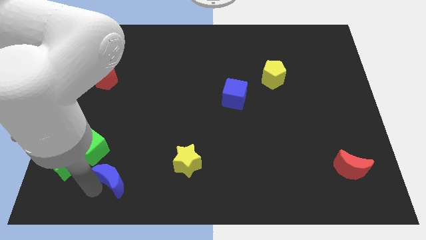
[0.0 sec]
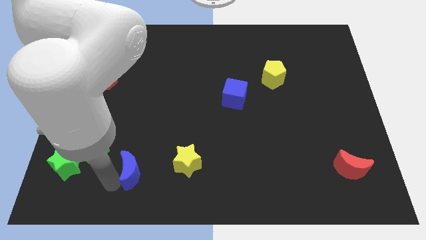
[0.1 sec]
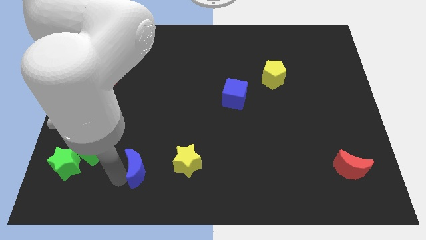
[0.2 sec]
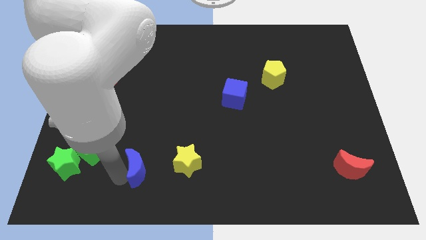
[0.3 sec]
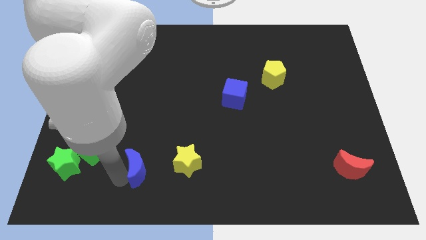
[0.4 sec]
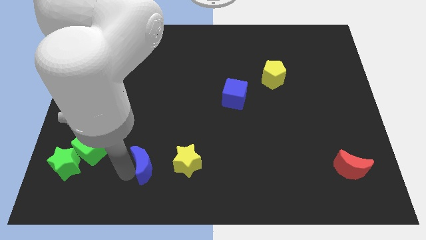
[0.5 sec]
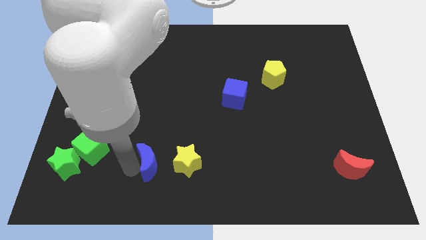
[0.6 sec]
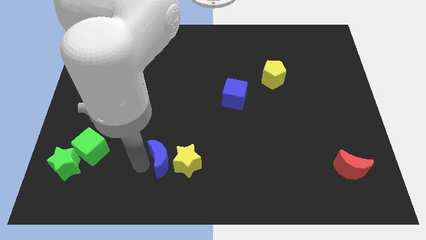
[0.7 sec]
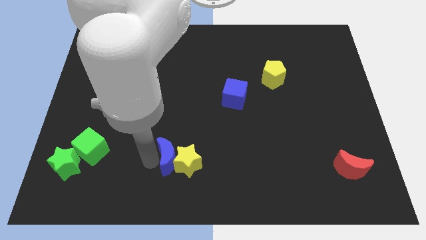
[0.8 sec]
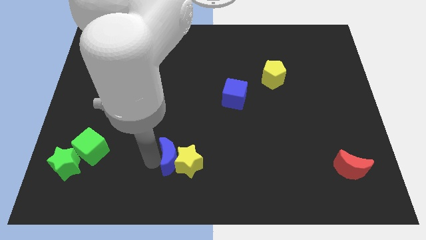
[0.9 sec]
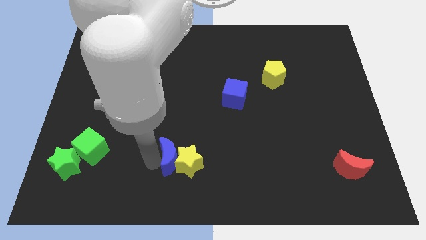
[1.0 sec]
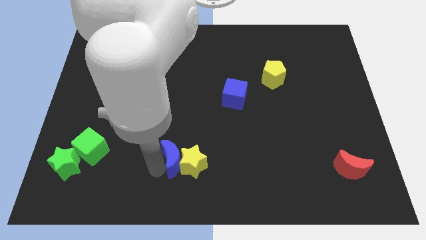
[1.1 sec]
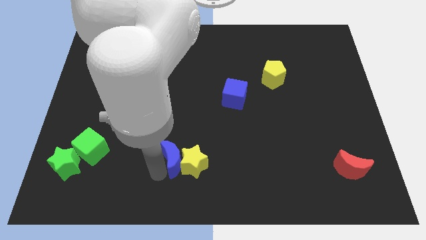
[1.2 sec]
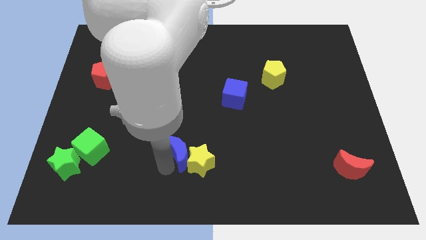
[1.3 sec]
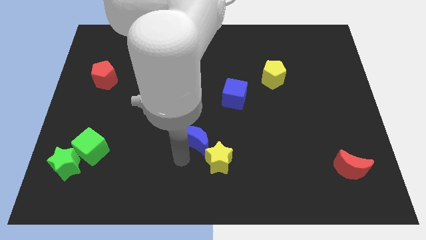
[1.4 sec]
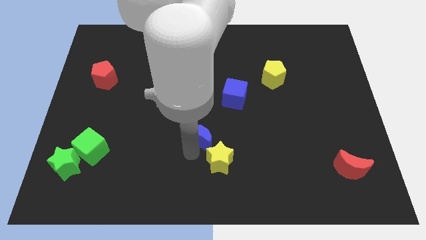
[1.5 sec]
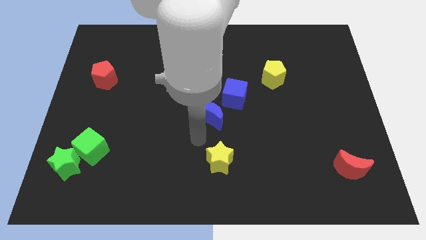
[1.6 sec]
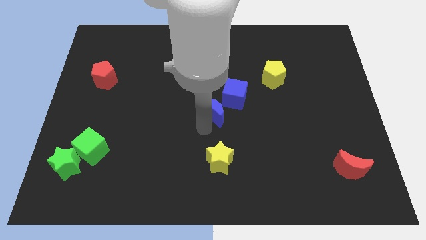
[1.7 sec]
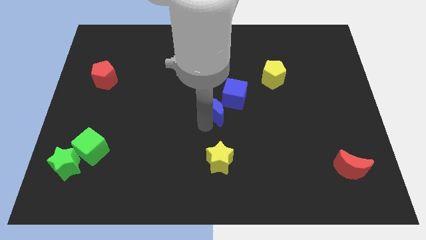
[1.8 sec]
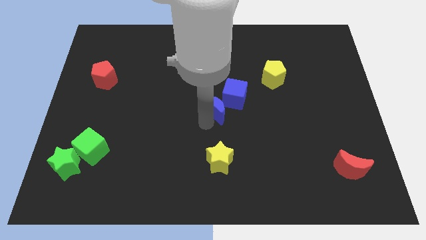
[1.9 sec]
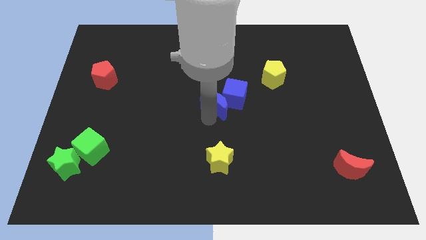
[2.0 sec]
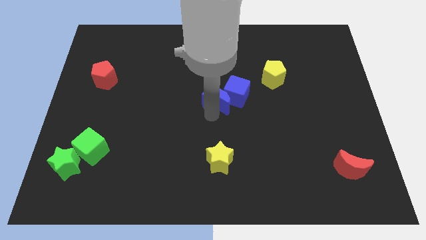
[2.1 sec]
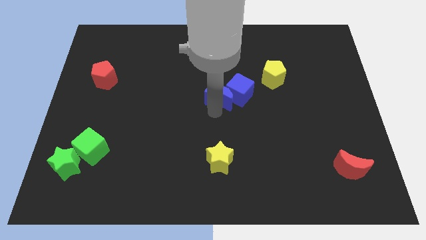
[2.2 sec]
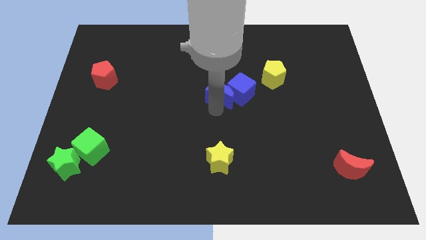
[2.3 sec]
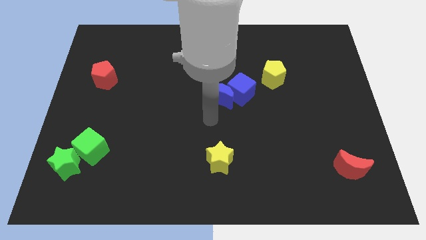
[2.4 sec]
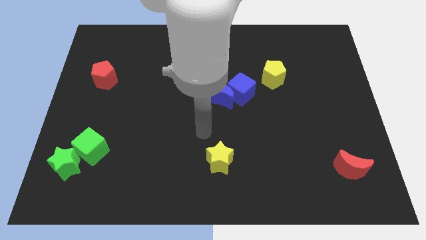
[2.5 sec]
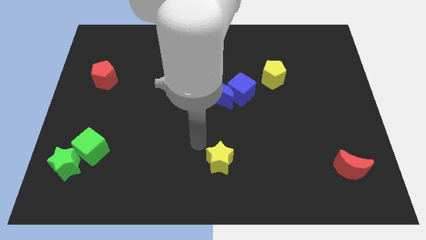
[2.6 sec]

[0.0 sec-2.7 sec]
push the blue moon into the blue cube

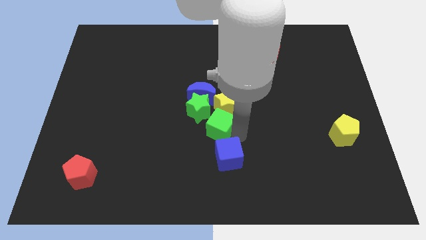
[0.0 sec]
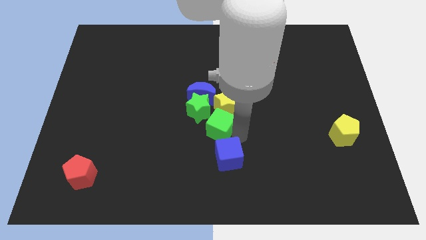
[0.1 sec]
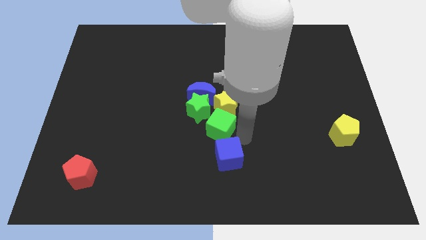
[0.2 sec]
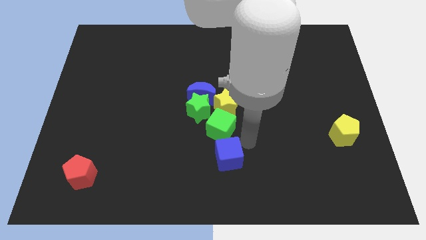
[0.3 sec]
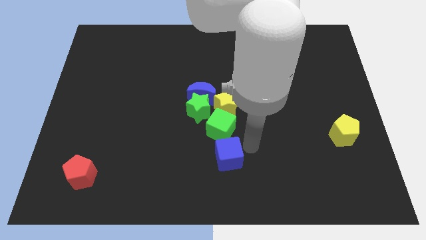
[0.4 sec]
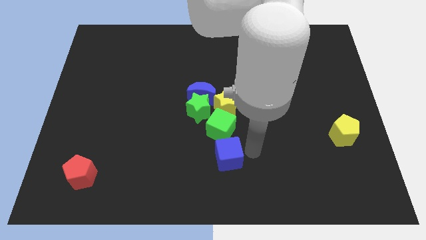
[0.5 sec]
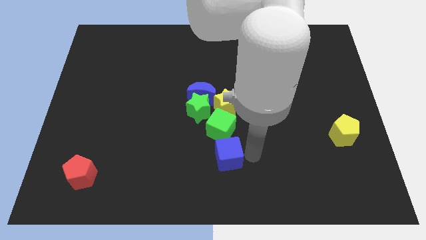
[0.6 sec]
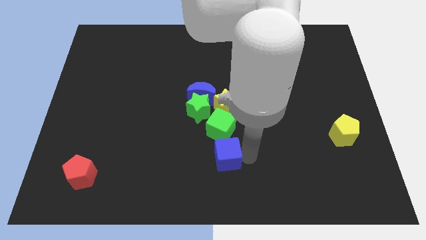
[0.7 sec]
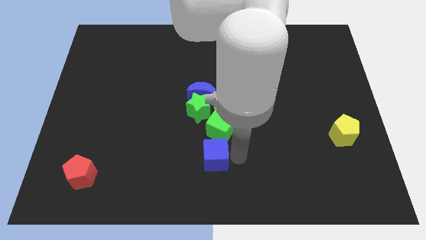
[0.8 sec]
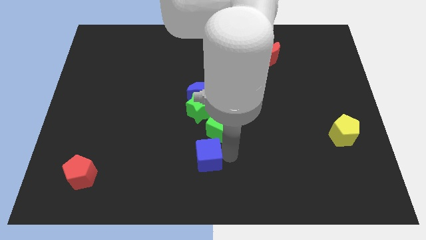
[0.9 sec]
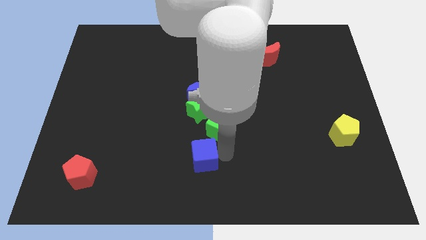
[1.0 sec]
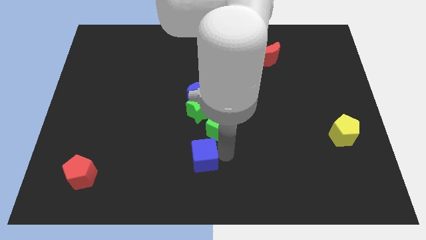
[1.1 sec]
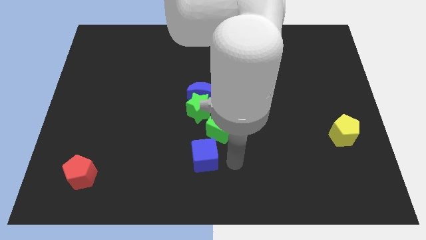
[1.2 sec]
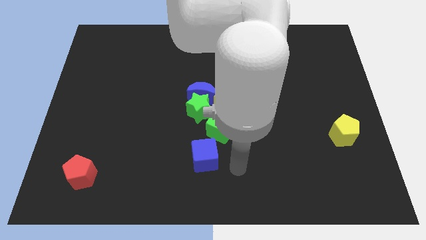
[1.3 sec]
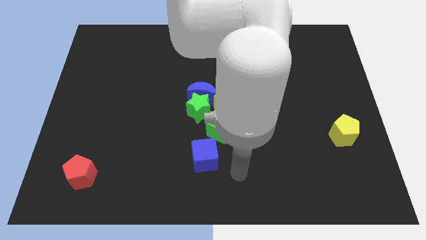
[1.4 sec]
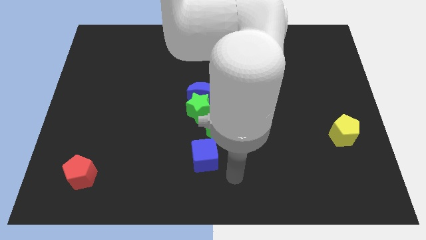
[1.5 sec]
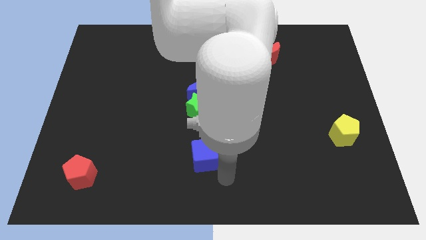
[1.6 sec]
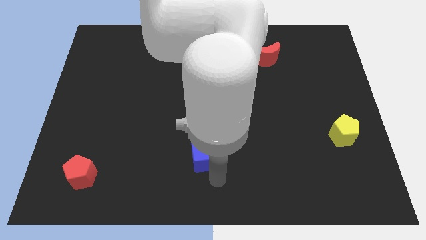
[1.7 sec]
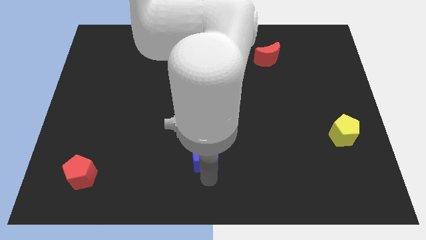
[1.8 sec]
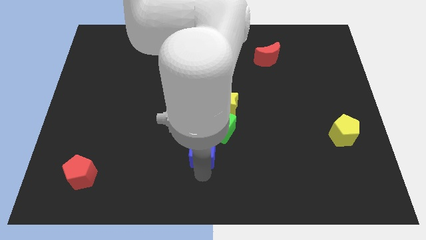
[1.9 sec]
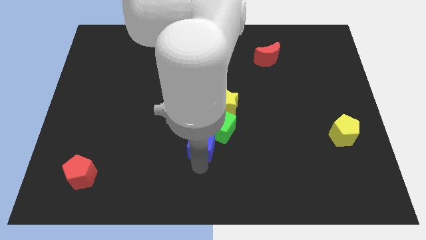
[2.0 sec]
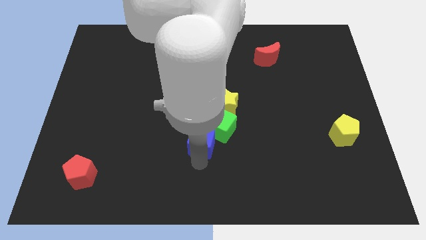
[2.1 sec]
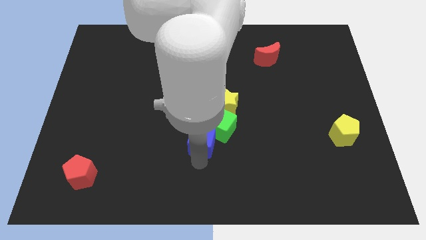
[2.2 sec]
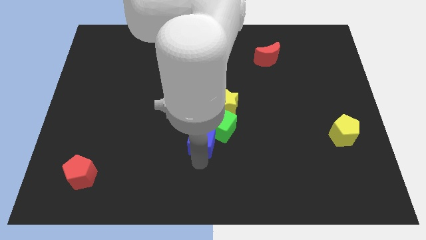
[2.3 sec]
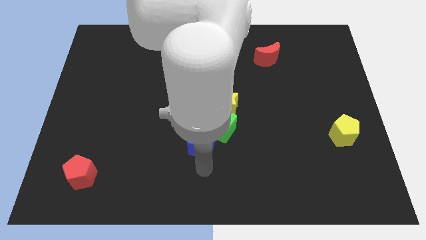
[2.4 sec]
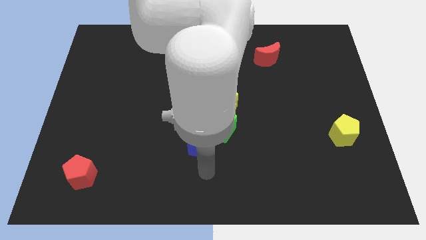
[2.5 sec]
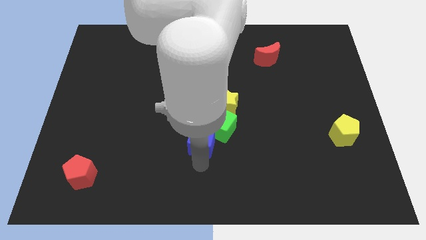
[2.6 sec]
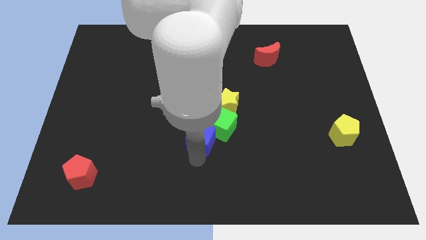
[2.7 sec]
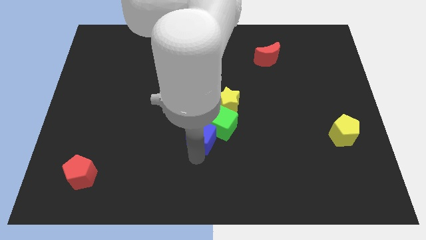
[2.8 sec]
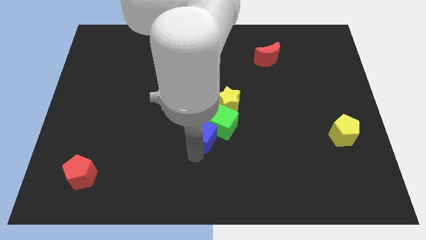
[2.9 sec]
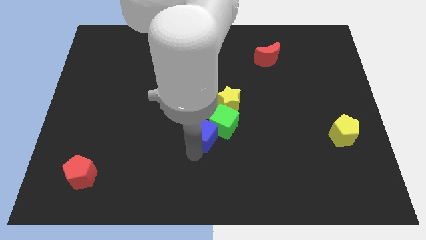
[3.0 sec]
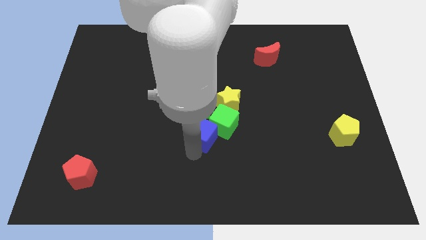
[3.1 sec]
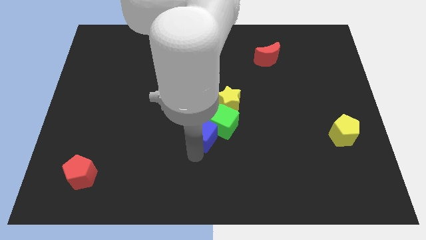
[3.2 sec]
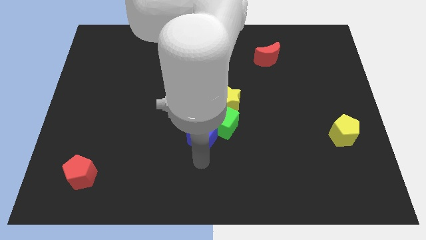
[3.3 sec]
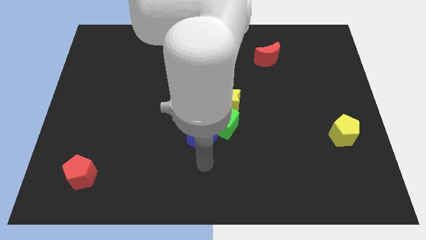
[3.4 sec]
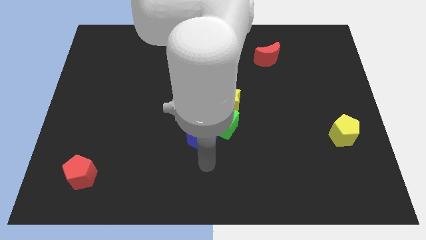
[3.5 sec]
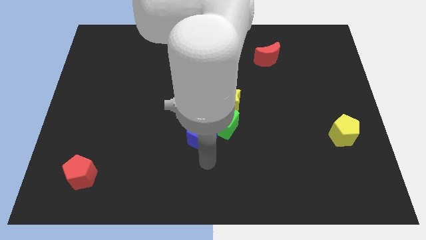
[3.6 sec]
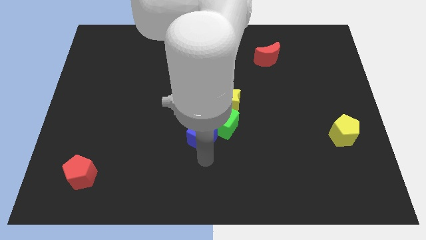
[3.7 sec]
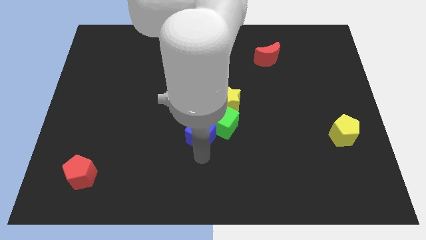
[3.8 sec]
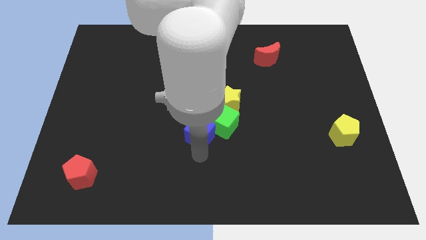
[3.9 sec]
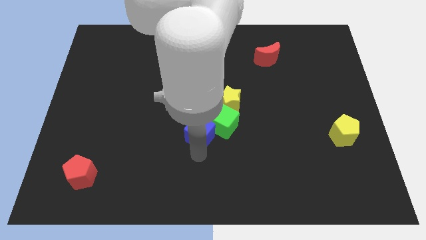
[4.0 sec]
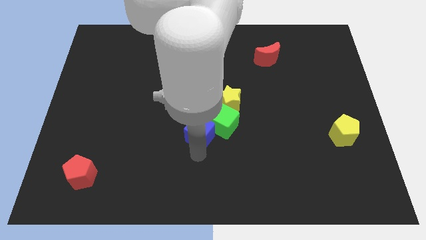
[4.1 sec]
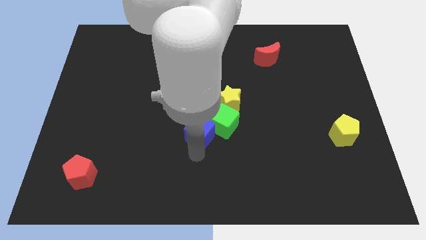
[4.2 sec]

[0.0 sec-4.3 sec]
push the blue cube into the group of blocks

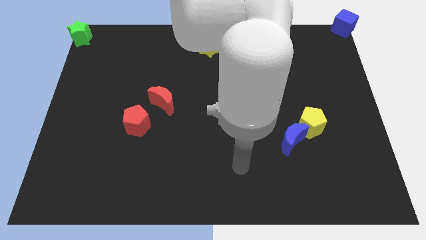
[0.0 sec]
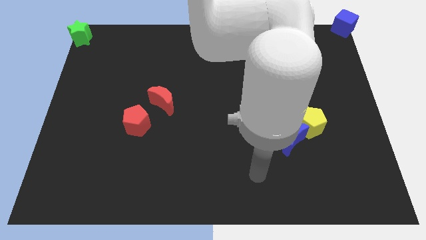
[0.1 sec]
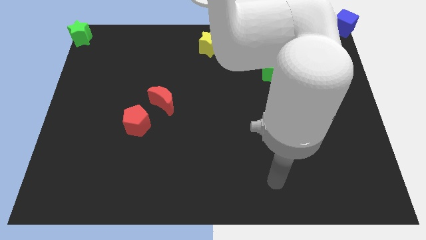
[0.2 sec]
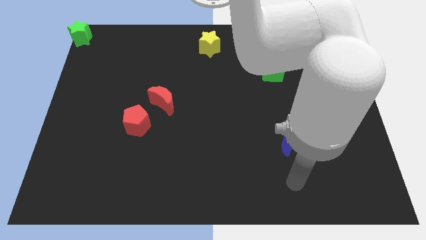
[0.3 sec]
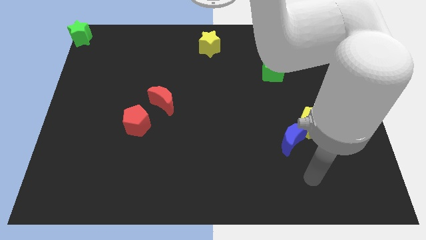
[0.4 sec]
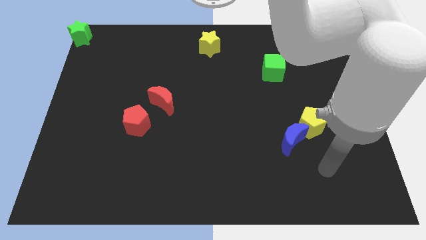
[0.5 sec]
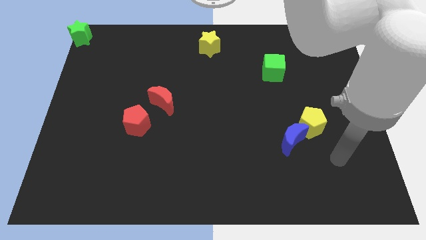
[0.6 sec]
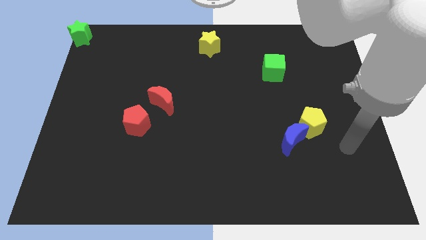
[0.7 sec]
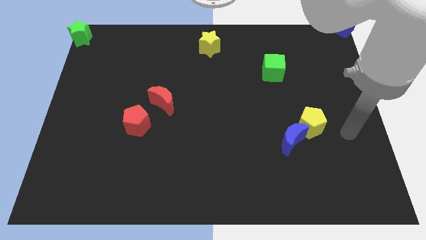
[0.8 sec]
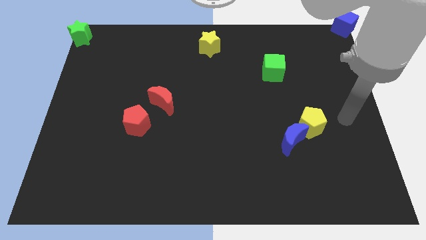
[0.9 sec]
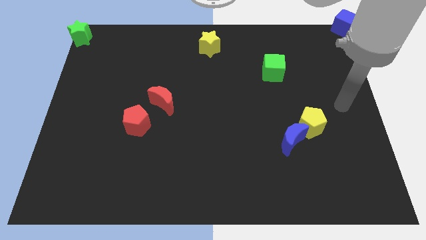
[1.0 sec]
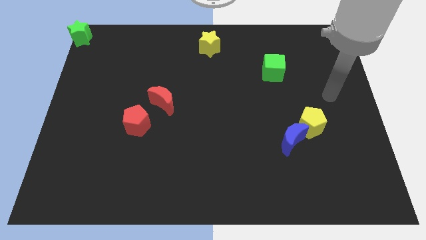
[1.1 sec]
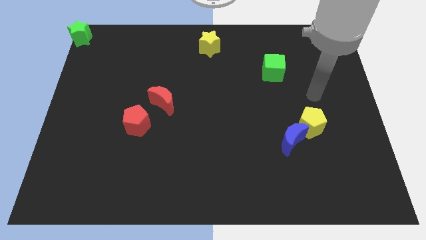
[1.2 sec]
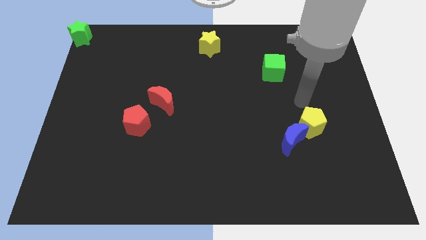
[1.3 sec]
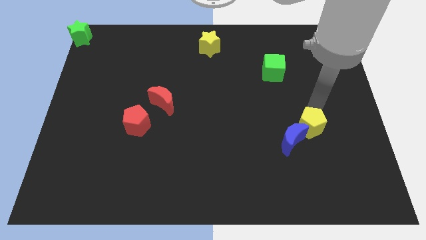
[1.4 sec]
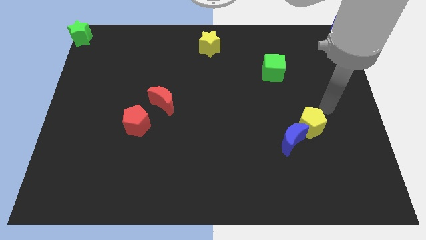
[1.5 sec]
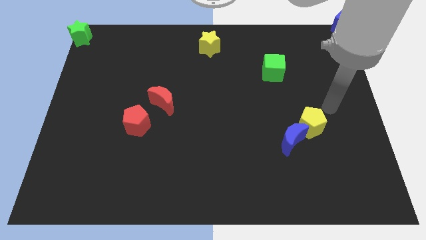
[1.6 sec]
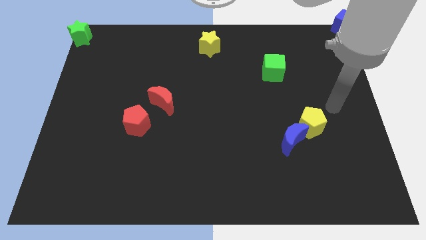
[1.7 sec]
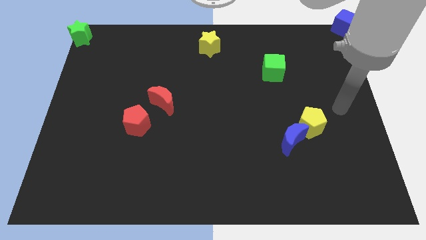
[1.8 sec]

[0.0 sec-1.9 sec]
move arm towards the yellow pentagon
